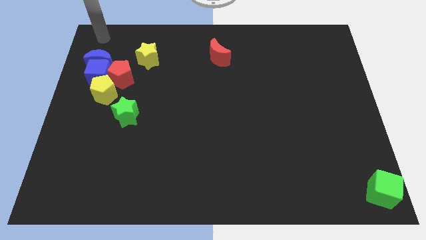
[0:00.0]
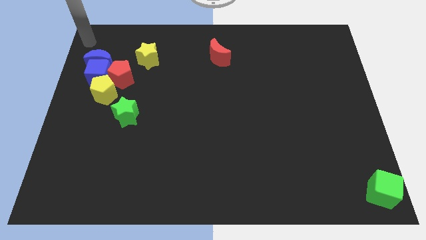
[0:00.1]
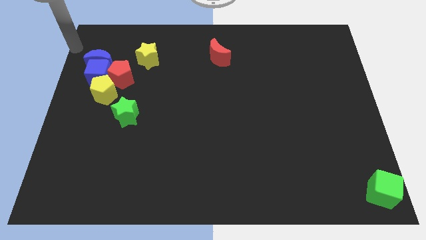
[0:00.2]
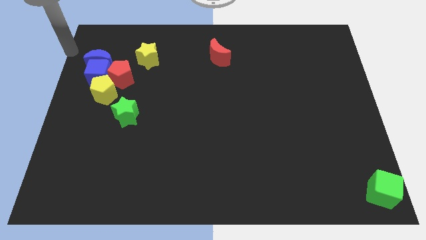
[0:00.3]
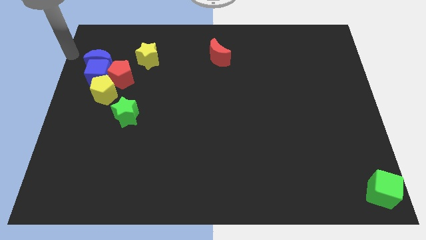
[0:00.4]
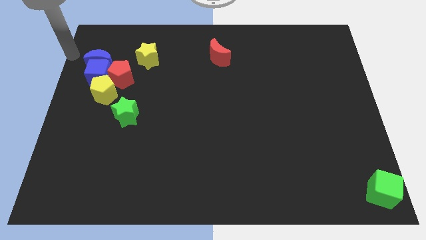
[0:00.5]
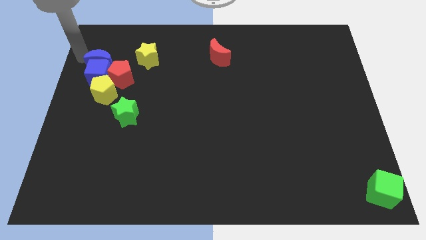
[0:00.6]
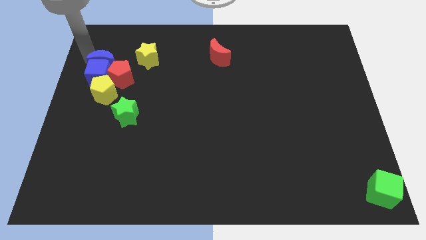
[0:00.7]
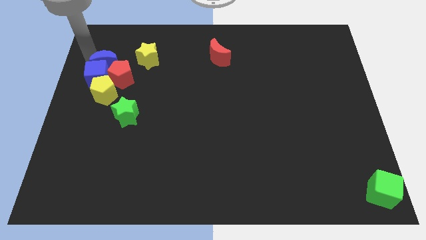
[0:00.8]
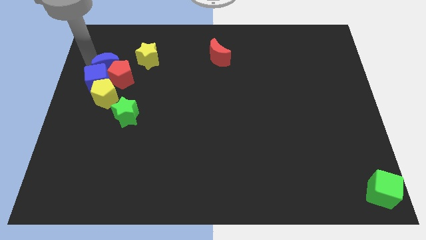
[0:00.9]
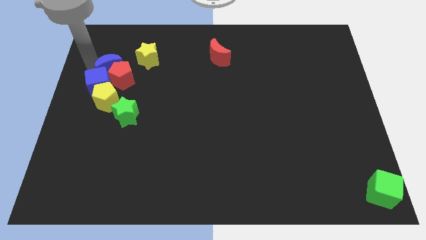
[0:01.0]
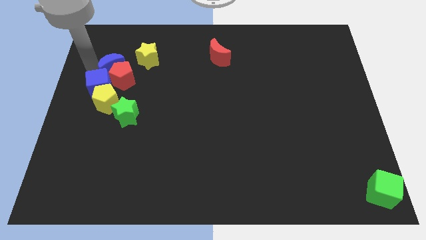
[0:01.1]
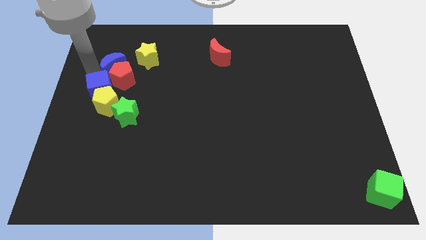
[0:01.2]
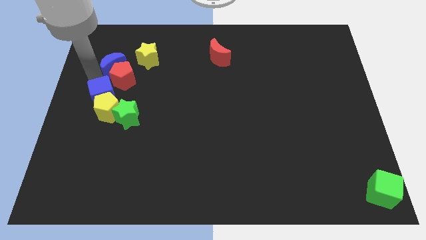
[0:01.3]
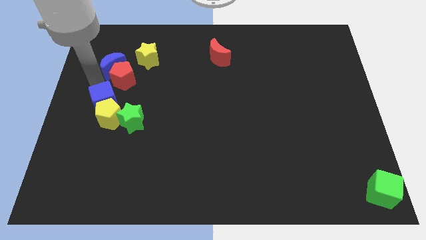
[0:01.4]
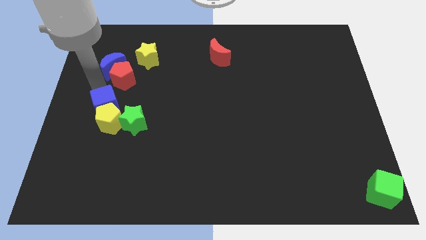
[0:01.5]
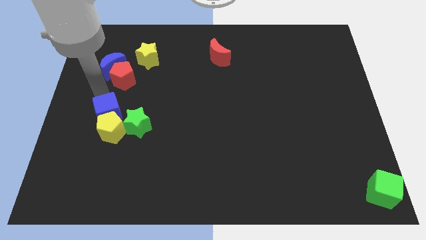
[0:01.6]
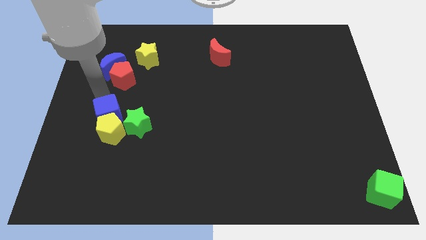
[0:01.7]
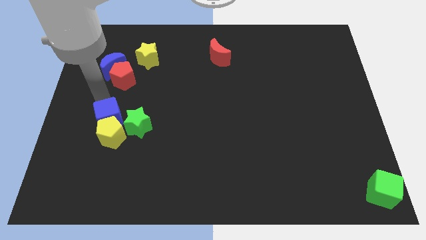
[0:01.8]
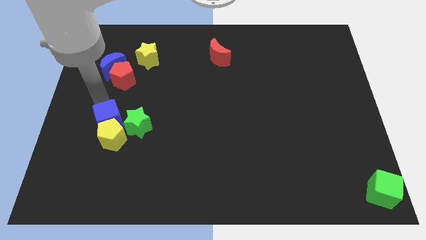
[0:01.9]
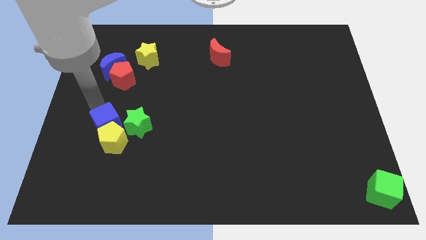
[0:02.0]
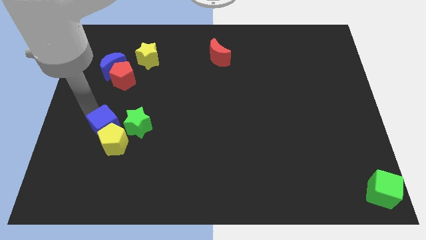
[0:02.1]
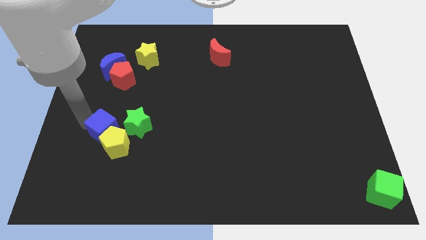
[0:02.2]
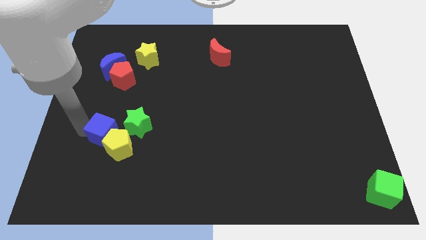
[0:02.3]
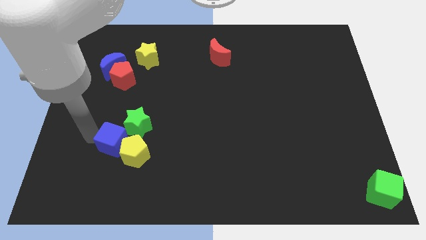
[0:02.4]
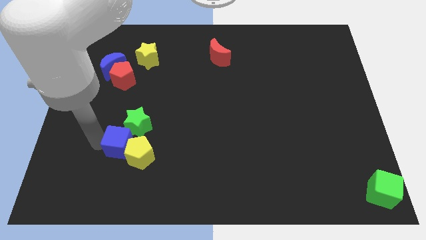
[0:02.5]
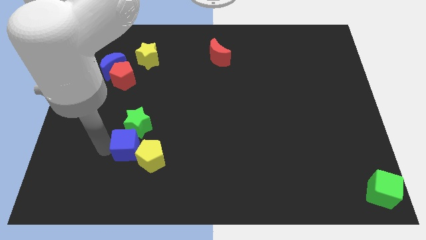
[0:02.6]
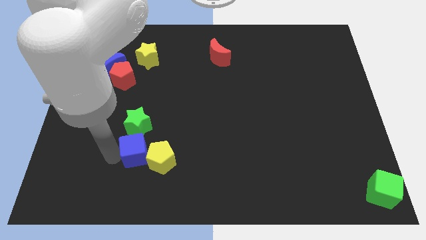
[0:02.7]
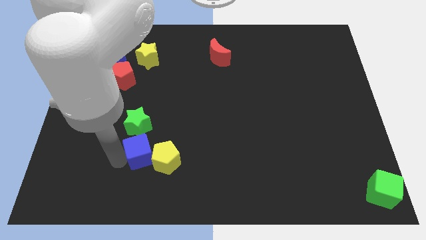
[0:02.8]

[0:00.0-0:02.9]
push blue cube below green star

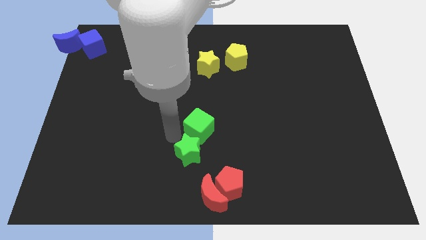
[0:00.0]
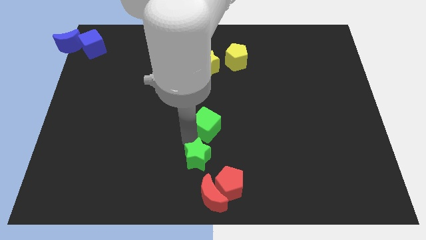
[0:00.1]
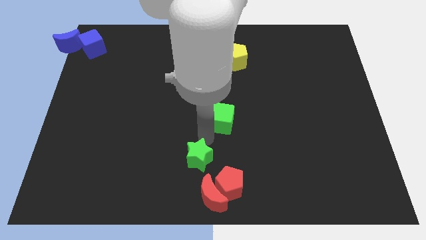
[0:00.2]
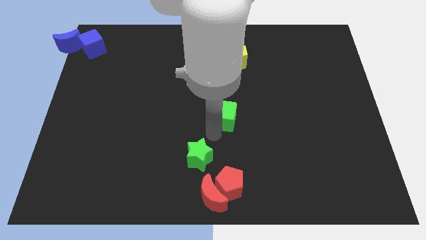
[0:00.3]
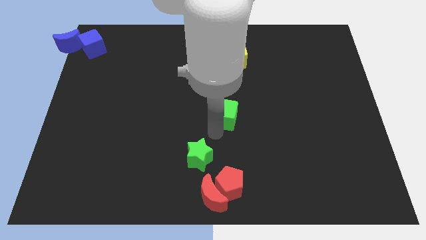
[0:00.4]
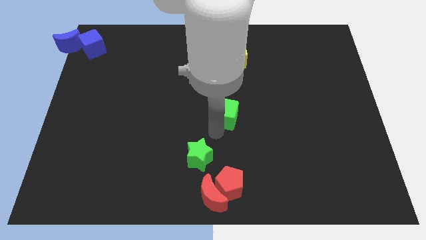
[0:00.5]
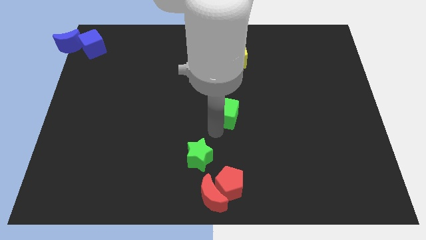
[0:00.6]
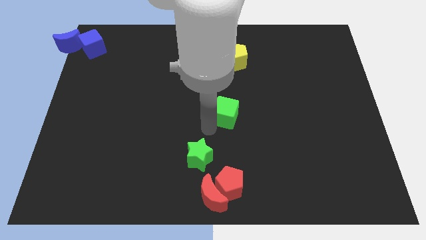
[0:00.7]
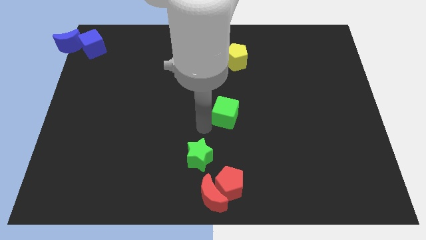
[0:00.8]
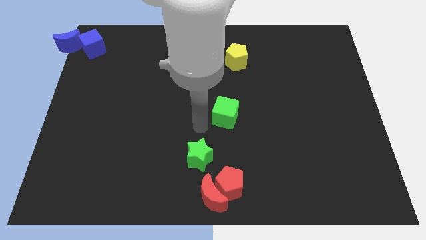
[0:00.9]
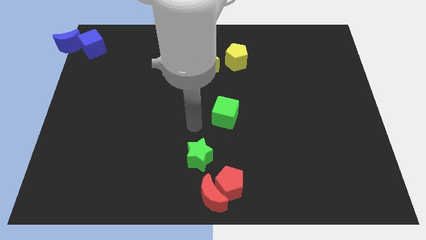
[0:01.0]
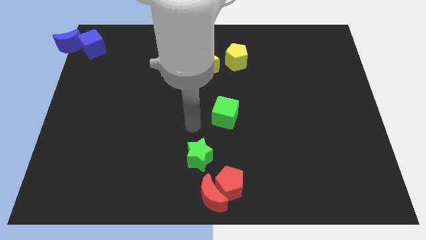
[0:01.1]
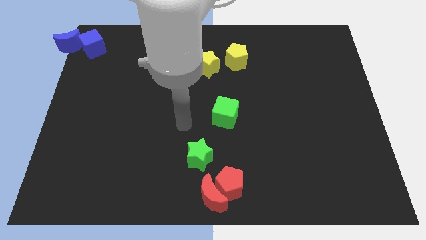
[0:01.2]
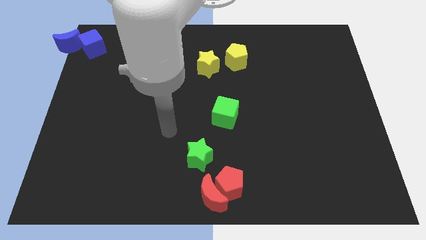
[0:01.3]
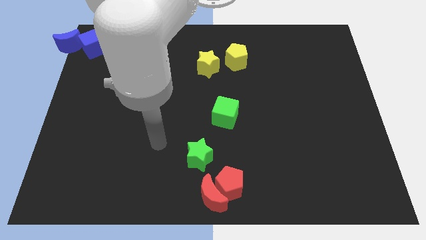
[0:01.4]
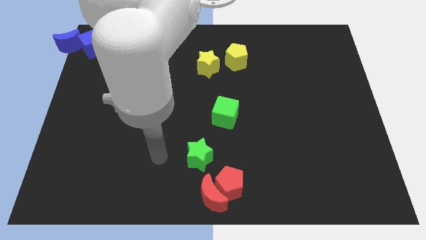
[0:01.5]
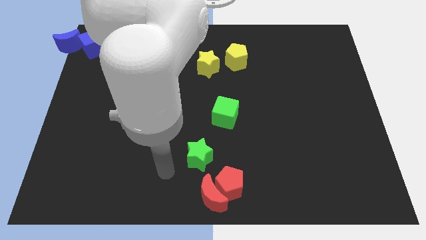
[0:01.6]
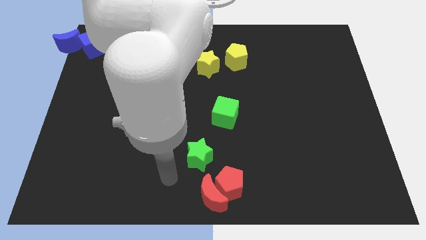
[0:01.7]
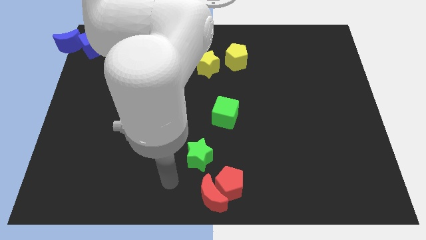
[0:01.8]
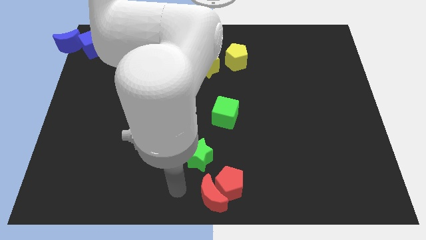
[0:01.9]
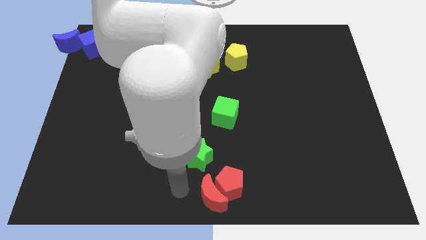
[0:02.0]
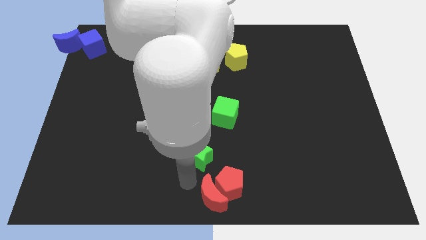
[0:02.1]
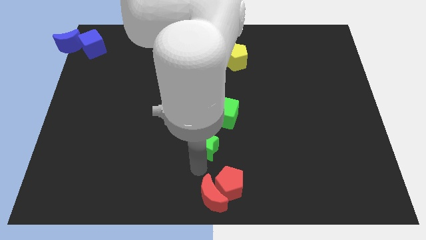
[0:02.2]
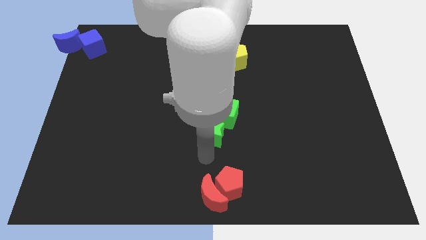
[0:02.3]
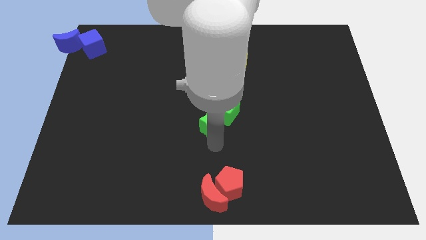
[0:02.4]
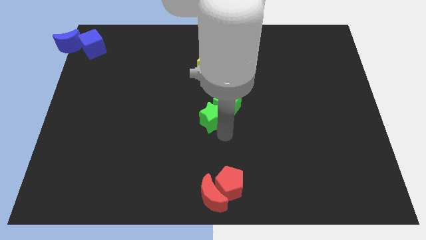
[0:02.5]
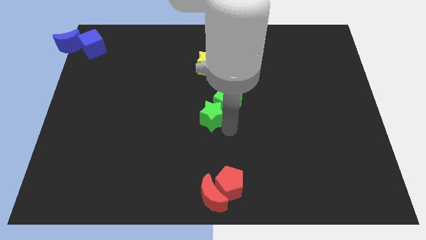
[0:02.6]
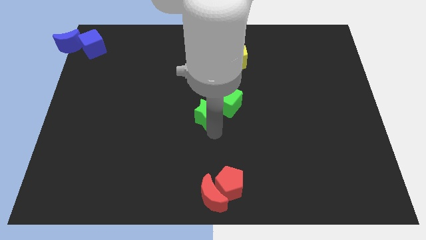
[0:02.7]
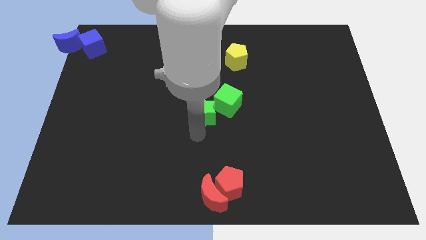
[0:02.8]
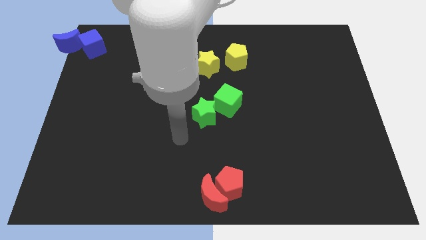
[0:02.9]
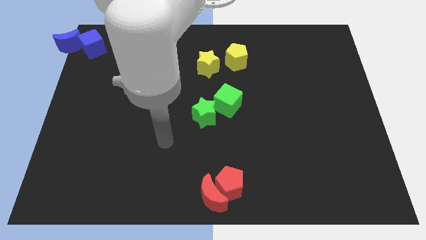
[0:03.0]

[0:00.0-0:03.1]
group up the green blocks at the center of the board

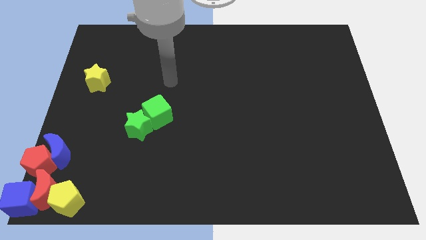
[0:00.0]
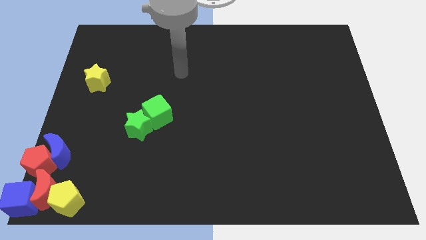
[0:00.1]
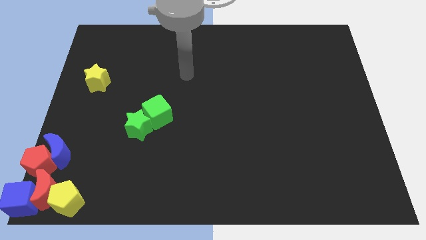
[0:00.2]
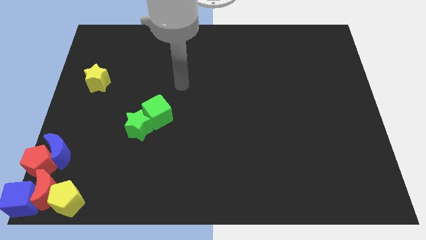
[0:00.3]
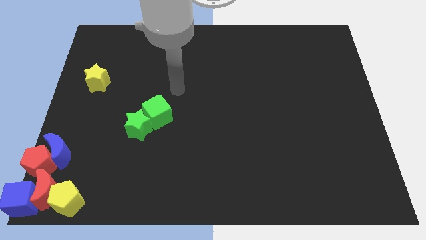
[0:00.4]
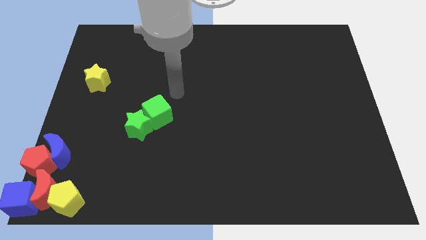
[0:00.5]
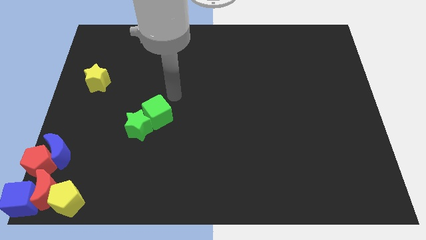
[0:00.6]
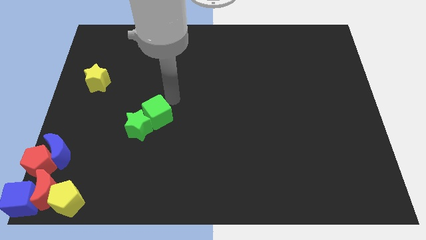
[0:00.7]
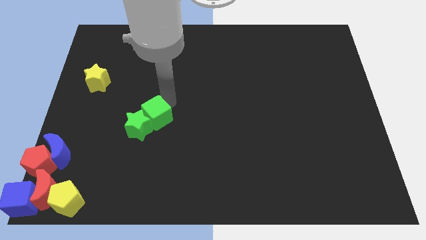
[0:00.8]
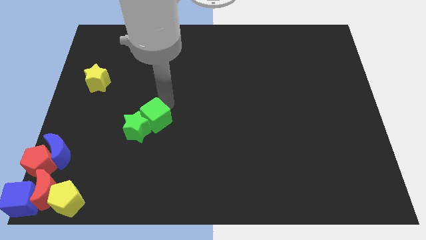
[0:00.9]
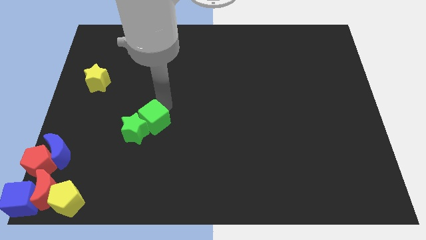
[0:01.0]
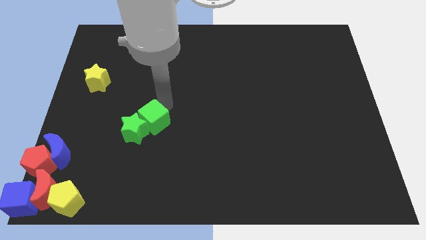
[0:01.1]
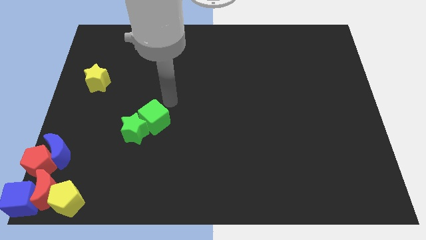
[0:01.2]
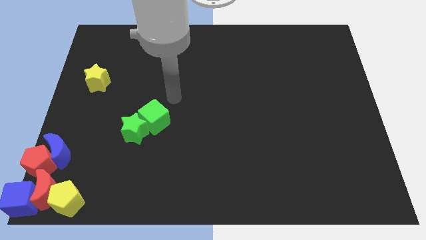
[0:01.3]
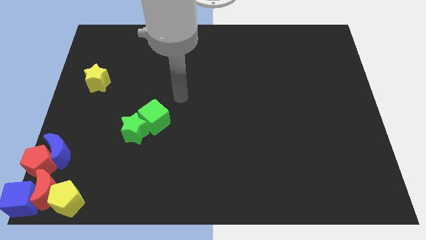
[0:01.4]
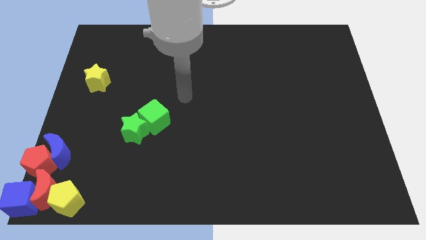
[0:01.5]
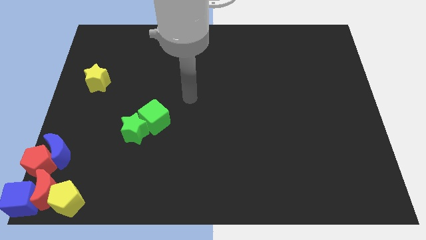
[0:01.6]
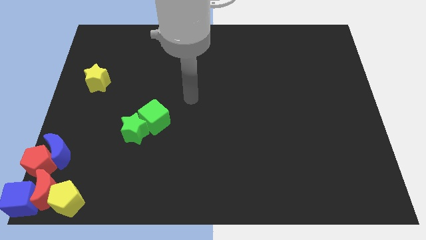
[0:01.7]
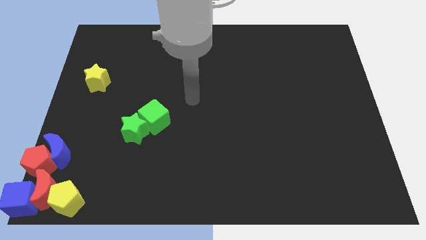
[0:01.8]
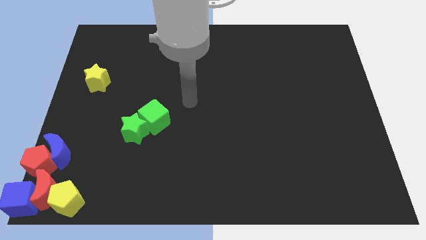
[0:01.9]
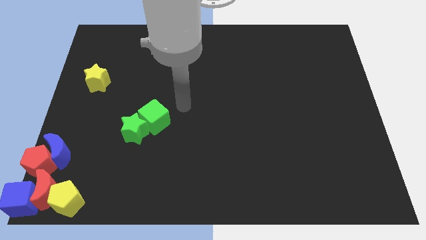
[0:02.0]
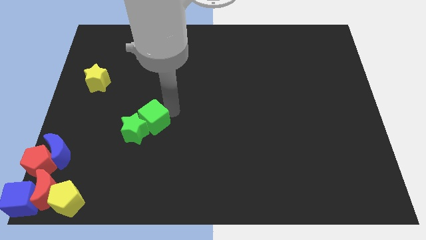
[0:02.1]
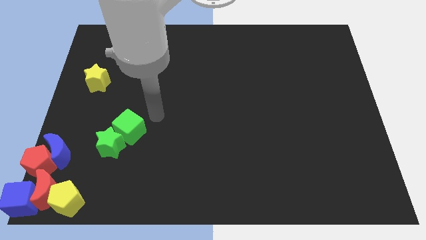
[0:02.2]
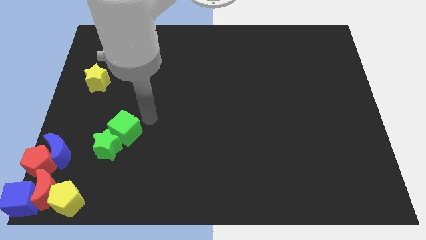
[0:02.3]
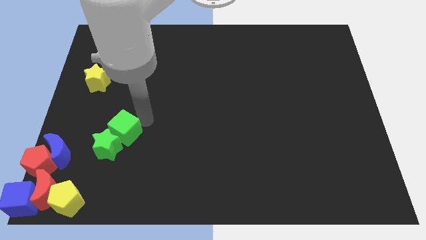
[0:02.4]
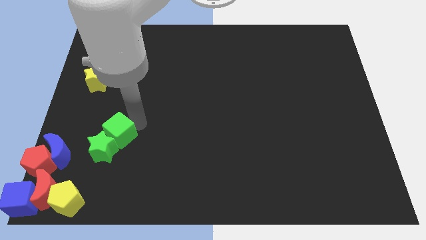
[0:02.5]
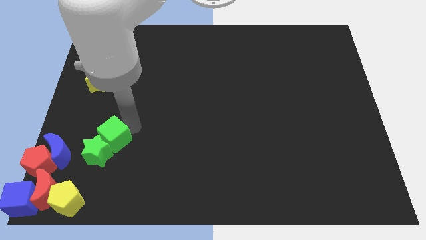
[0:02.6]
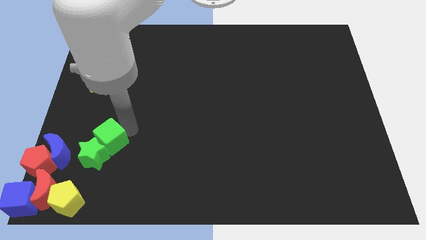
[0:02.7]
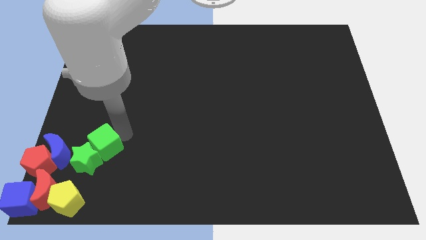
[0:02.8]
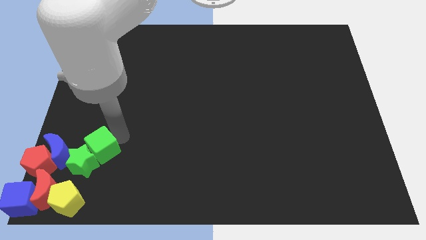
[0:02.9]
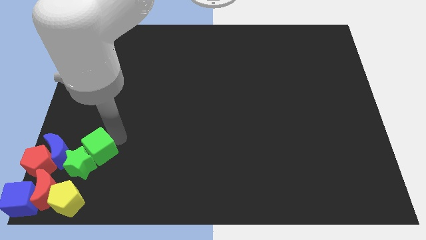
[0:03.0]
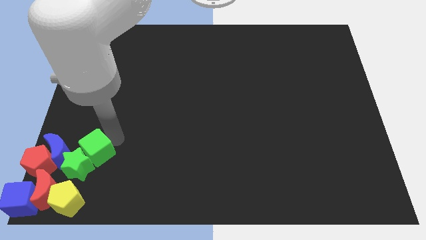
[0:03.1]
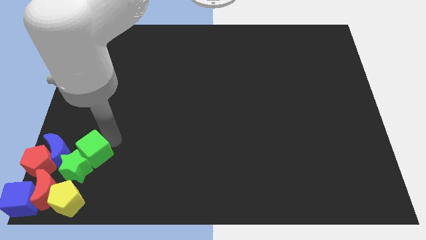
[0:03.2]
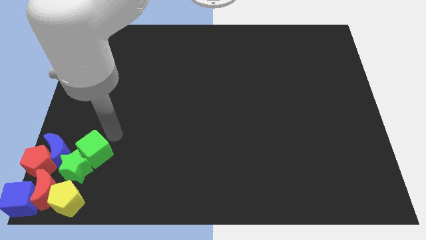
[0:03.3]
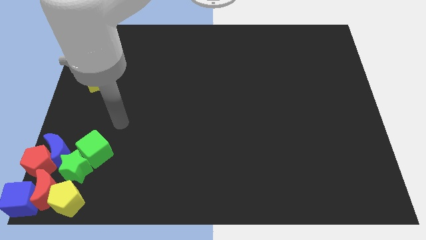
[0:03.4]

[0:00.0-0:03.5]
push the green cube and green star close to the blue crescent
